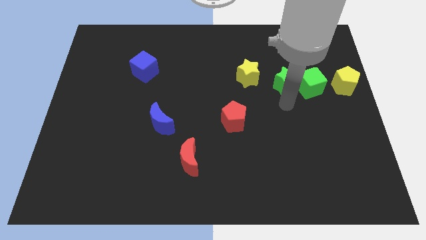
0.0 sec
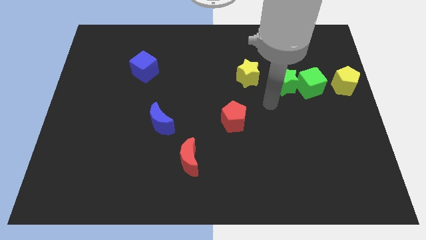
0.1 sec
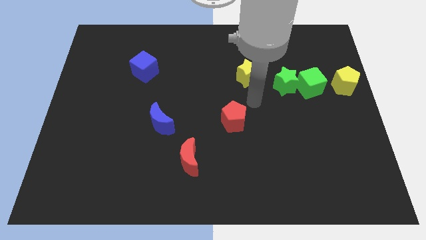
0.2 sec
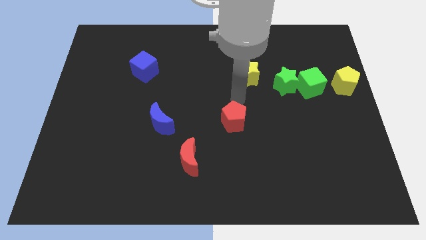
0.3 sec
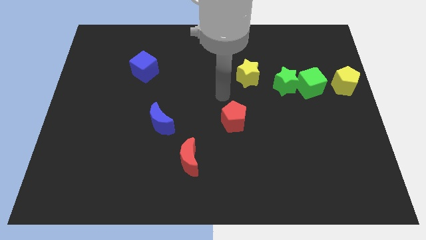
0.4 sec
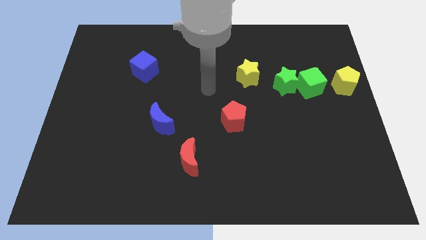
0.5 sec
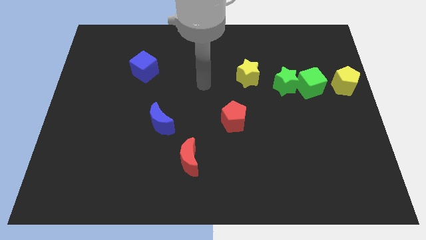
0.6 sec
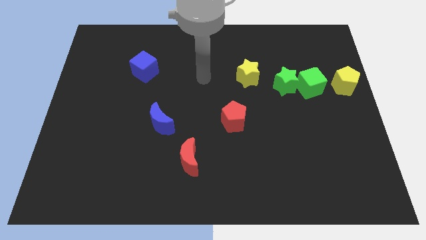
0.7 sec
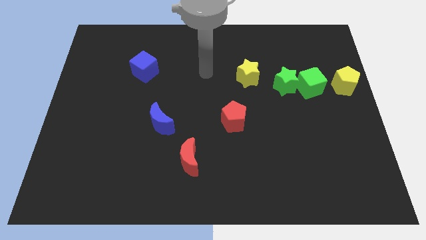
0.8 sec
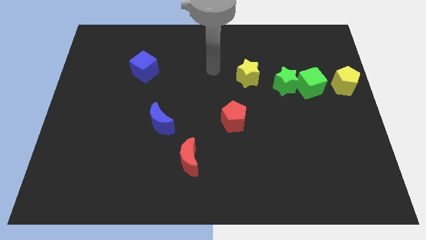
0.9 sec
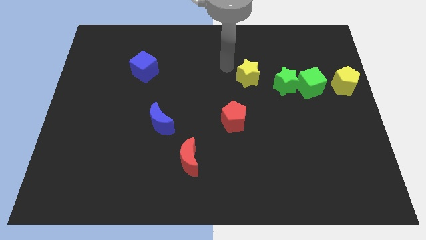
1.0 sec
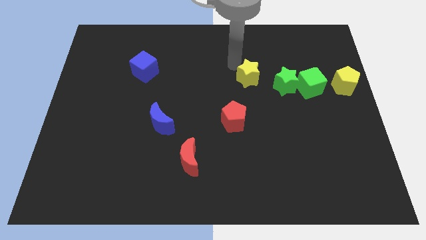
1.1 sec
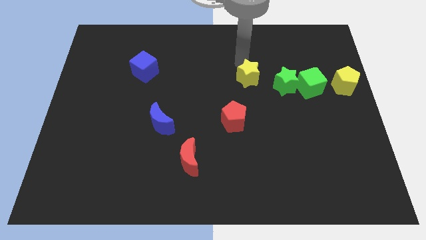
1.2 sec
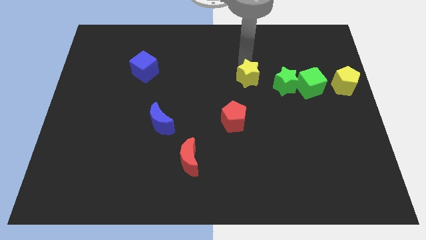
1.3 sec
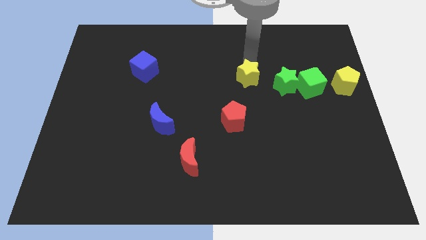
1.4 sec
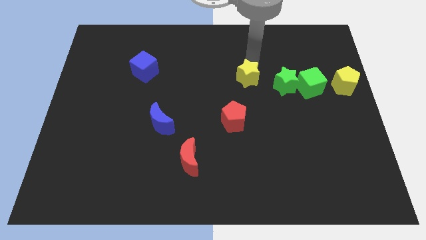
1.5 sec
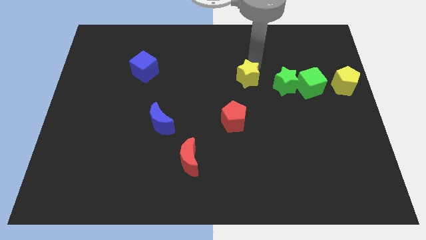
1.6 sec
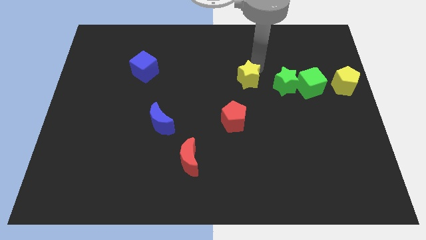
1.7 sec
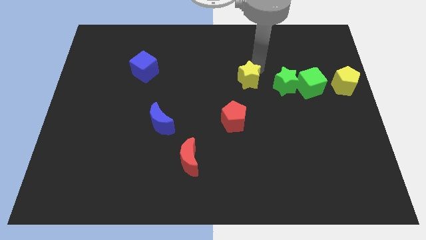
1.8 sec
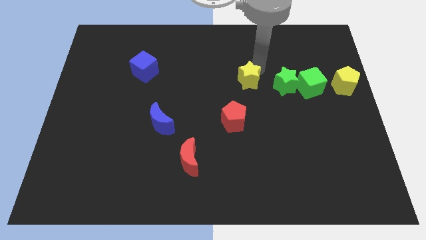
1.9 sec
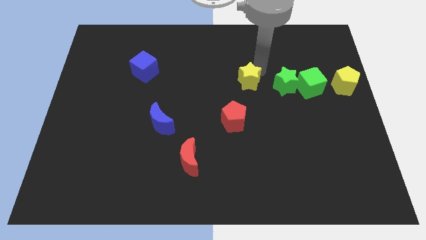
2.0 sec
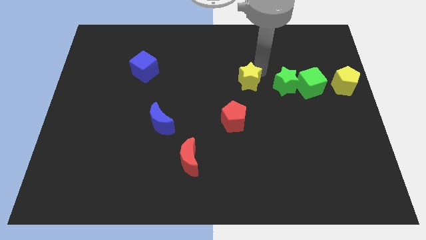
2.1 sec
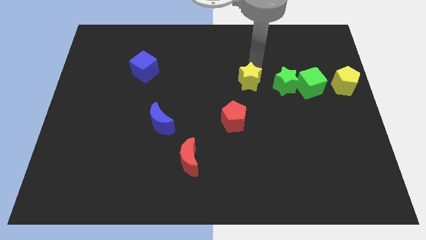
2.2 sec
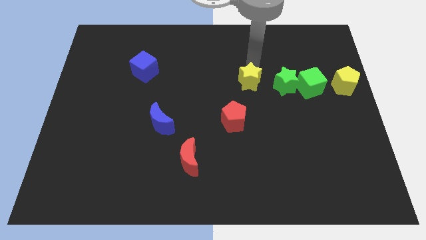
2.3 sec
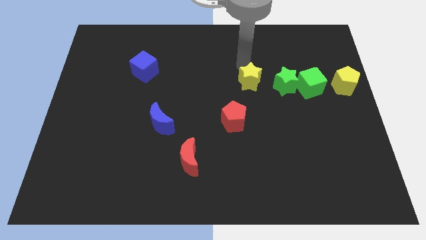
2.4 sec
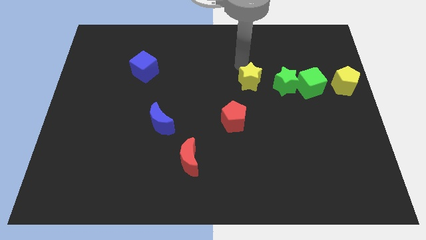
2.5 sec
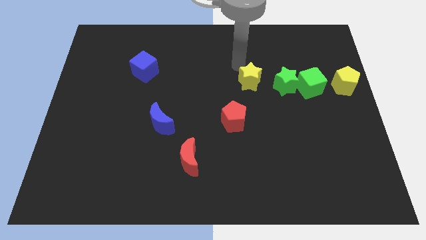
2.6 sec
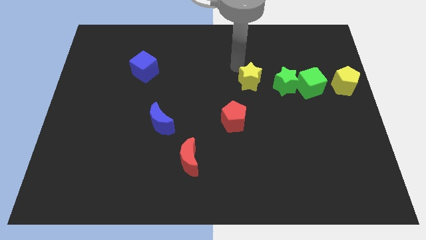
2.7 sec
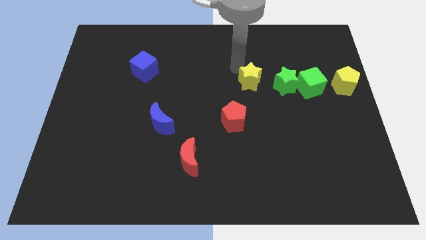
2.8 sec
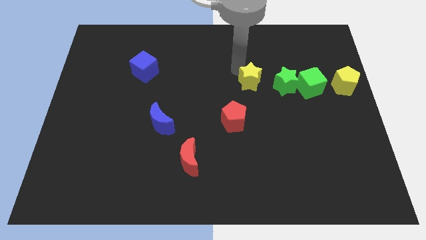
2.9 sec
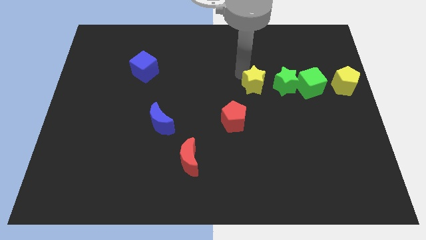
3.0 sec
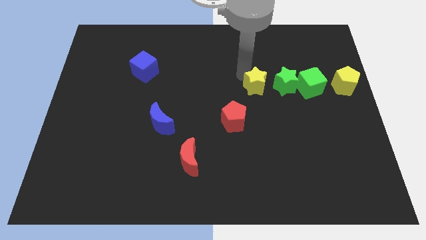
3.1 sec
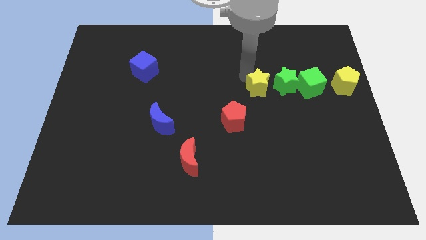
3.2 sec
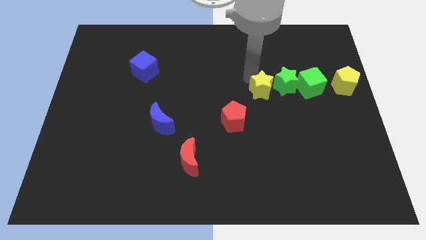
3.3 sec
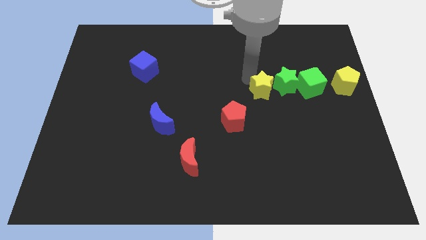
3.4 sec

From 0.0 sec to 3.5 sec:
move the yellow pentagon left to the green star

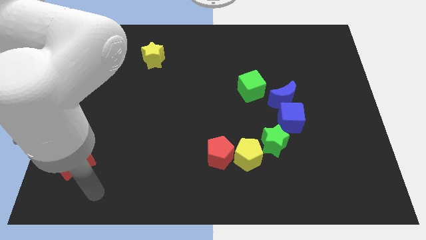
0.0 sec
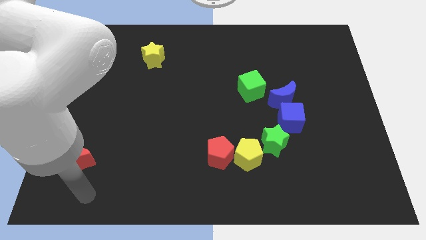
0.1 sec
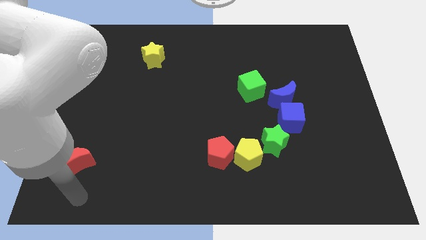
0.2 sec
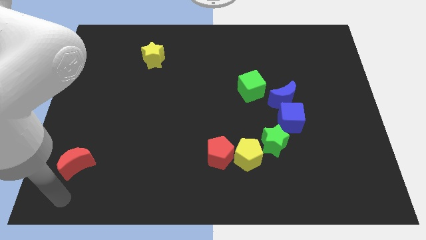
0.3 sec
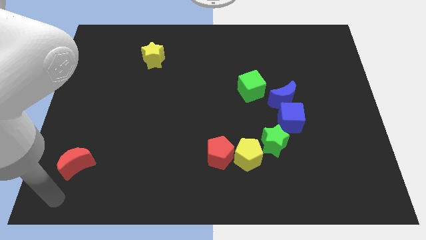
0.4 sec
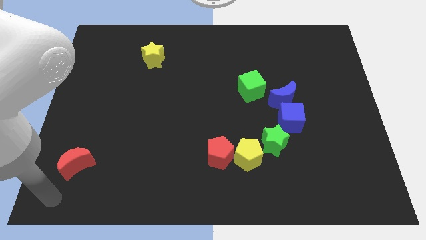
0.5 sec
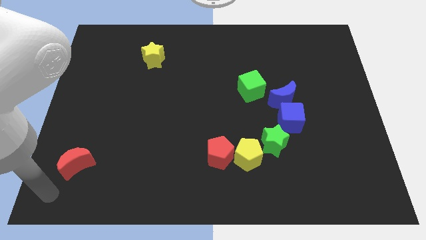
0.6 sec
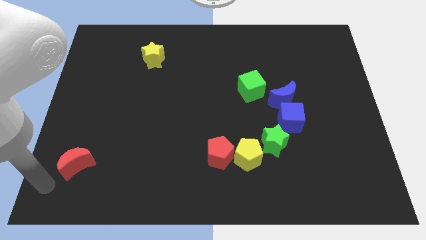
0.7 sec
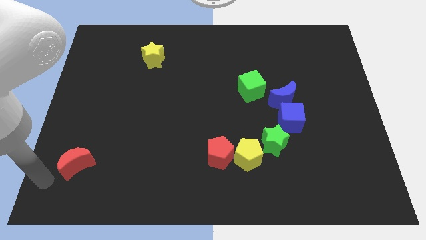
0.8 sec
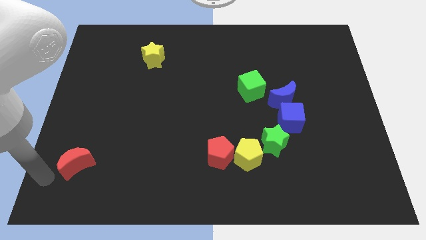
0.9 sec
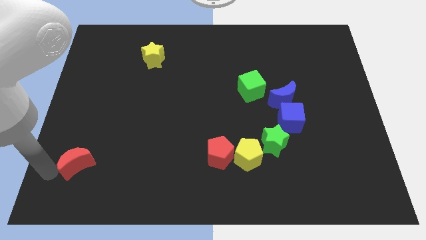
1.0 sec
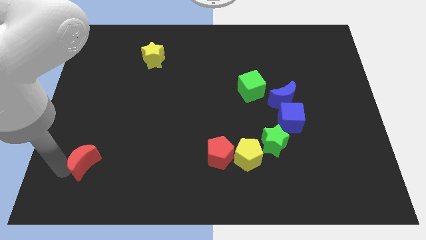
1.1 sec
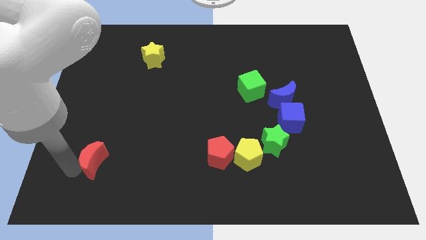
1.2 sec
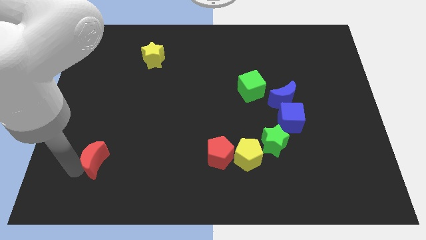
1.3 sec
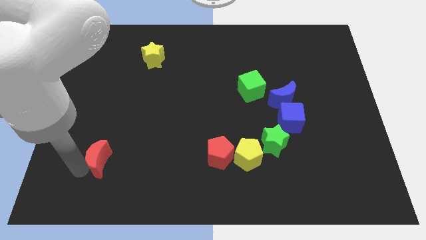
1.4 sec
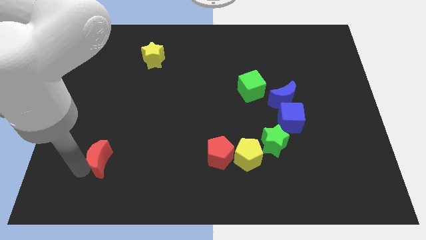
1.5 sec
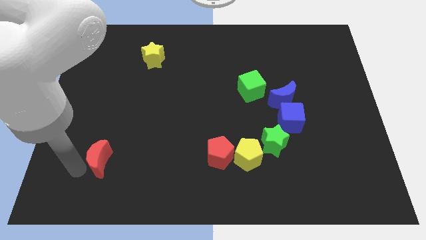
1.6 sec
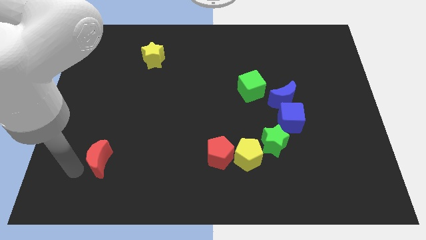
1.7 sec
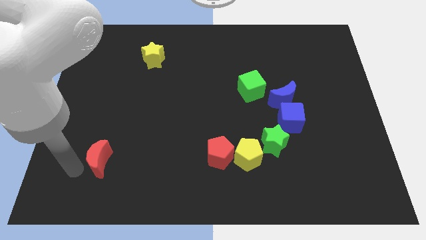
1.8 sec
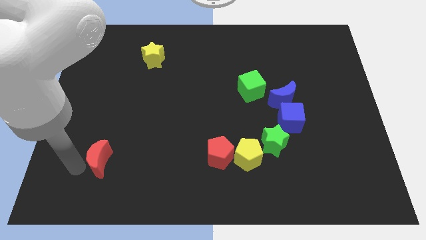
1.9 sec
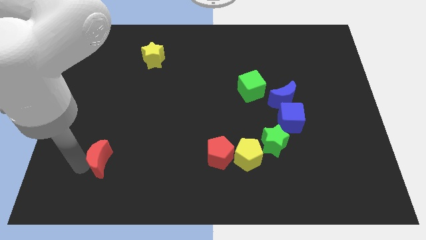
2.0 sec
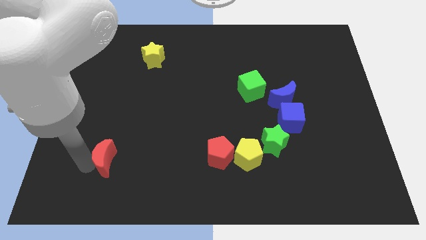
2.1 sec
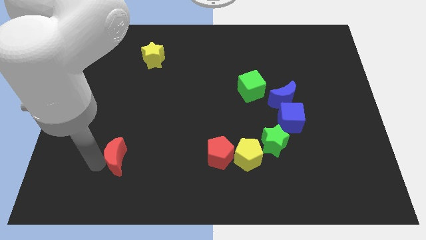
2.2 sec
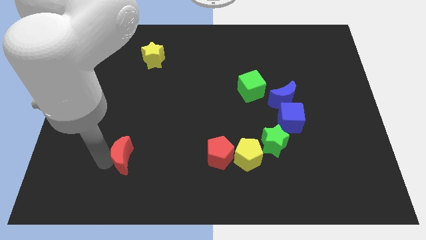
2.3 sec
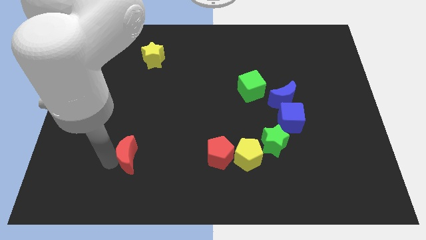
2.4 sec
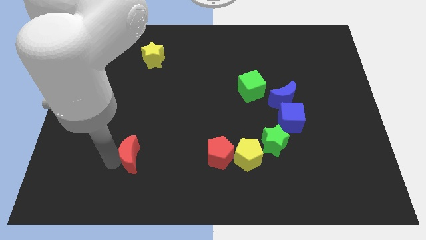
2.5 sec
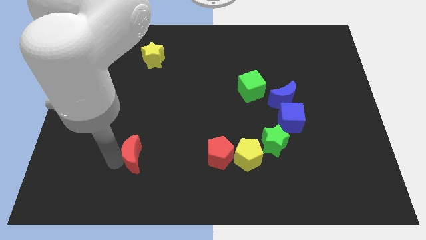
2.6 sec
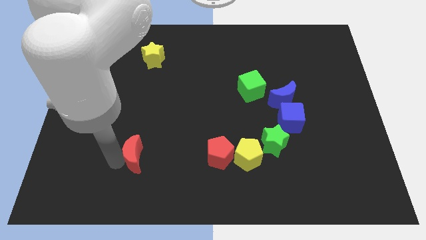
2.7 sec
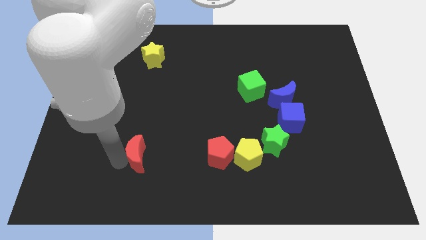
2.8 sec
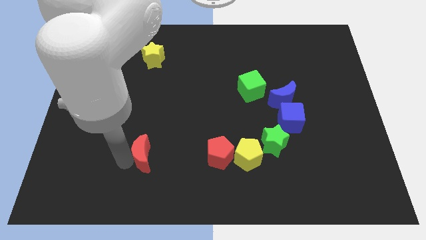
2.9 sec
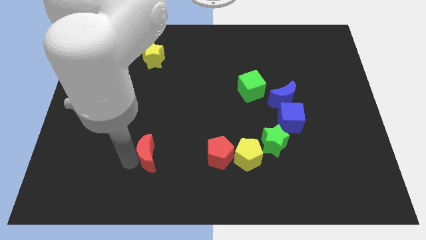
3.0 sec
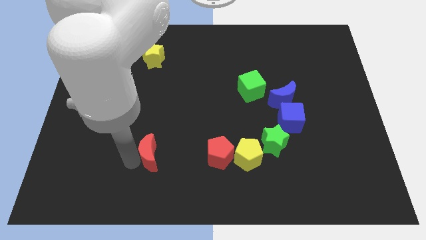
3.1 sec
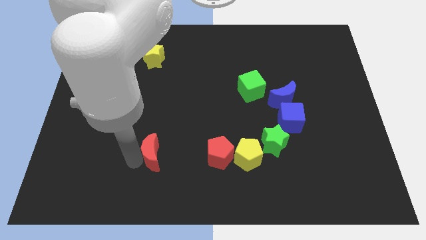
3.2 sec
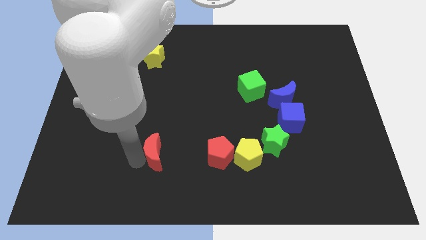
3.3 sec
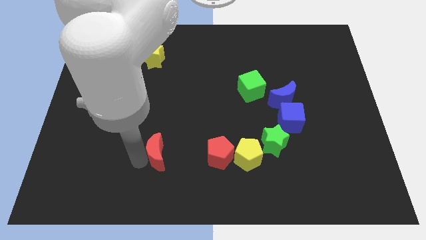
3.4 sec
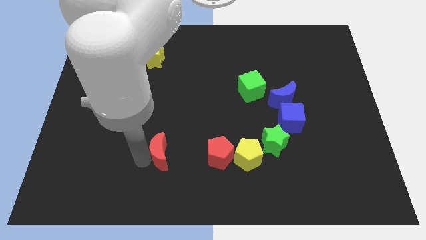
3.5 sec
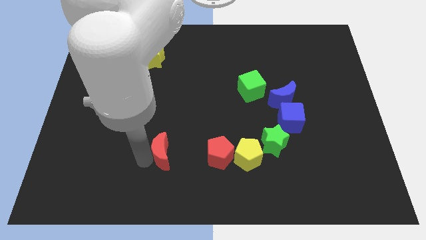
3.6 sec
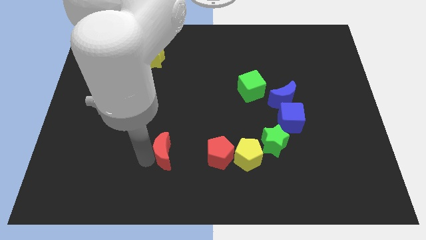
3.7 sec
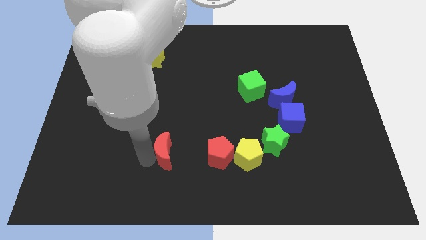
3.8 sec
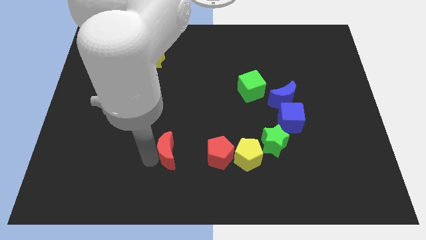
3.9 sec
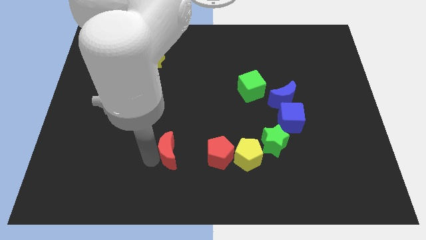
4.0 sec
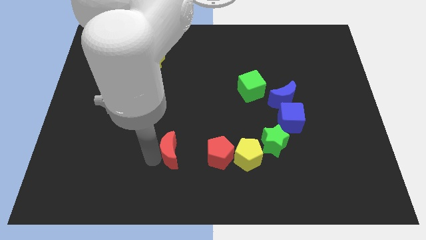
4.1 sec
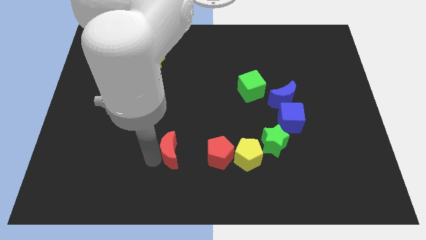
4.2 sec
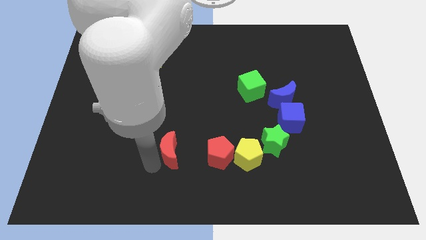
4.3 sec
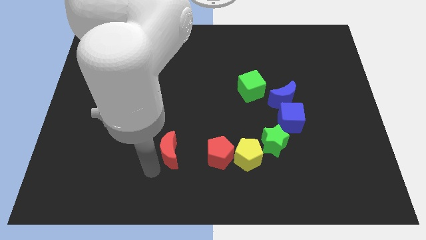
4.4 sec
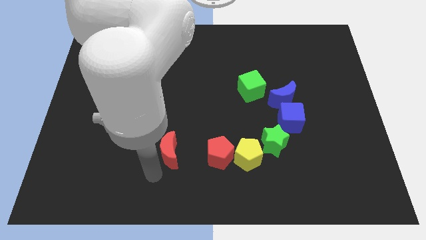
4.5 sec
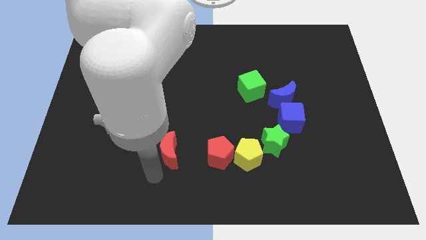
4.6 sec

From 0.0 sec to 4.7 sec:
move the red crescent to the left of the red pentagon

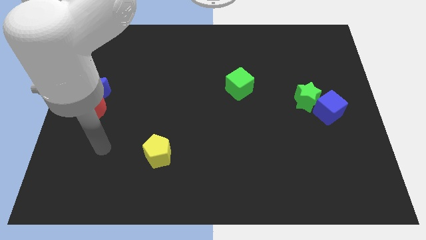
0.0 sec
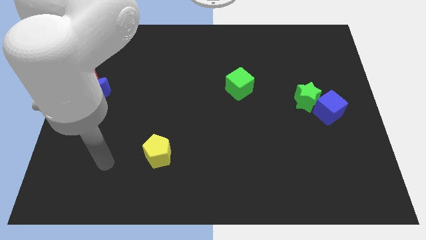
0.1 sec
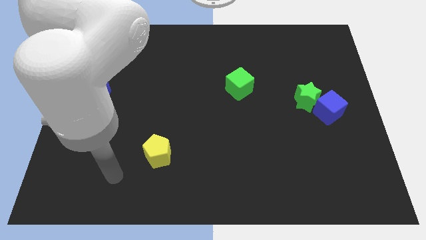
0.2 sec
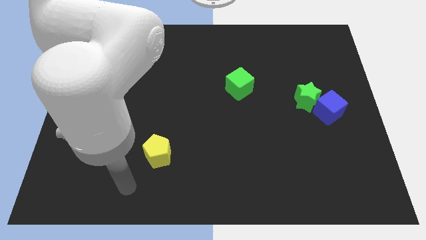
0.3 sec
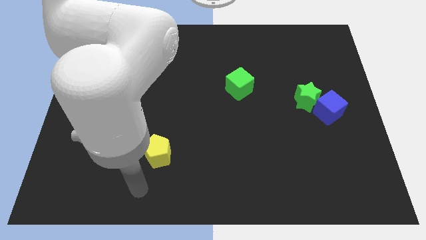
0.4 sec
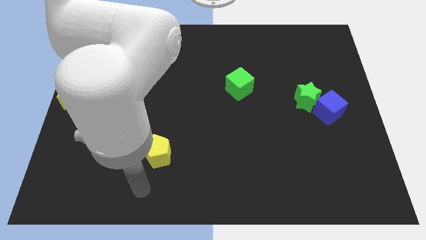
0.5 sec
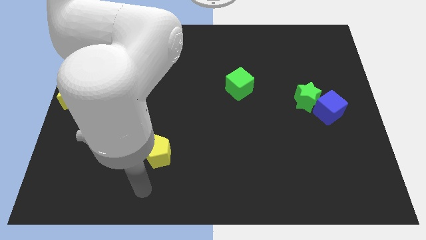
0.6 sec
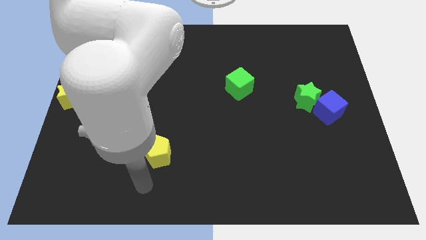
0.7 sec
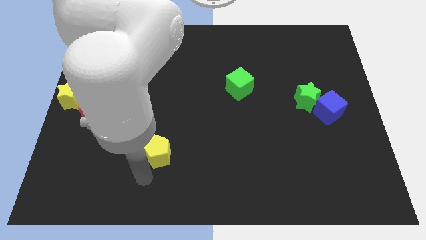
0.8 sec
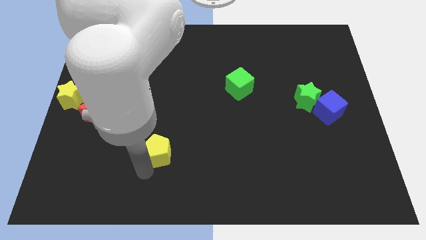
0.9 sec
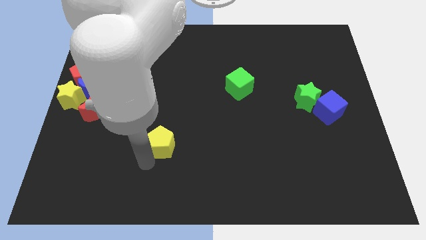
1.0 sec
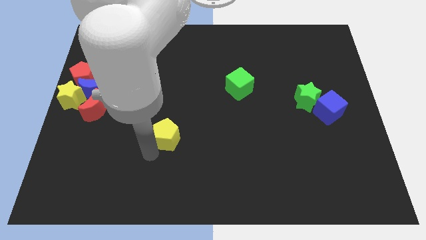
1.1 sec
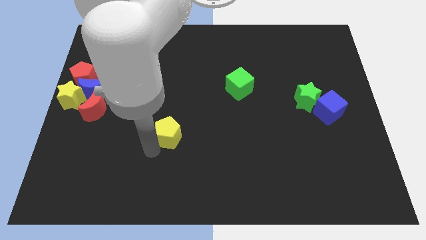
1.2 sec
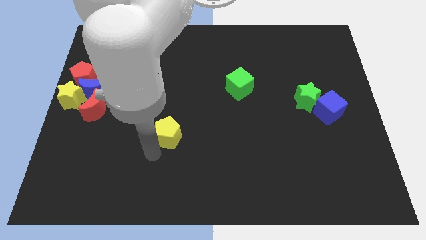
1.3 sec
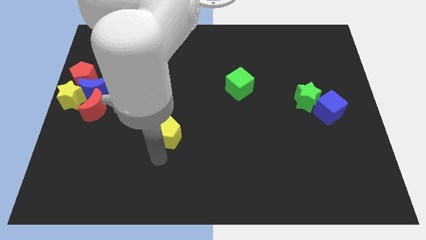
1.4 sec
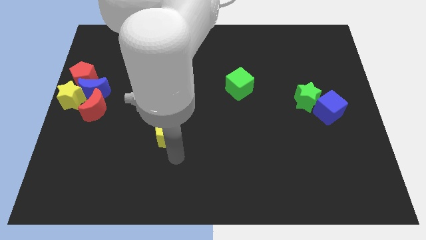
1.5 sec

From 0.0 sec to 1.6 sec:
push the yellow pentagon slightly to the top
